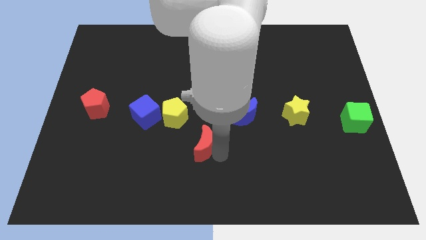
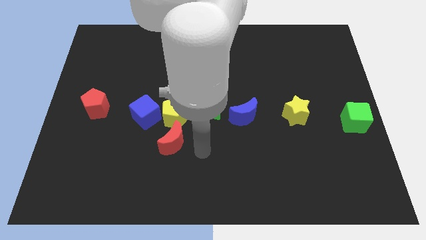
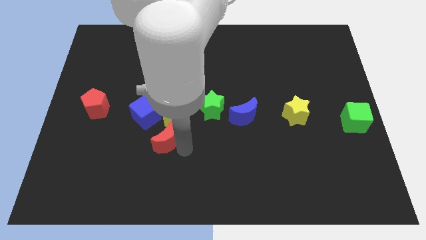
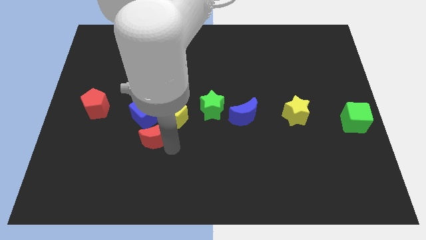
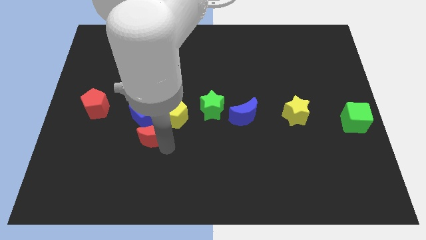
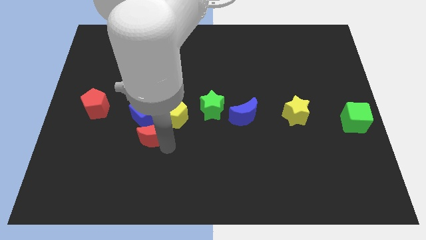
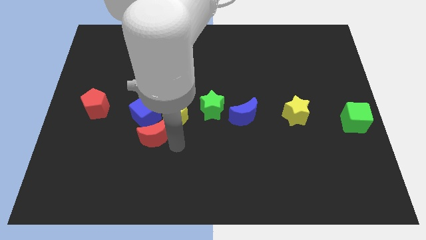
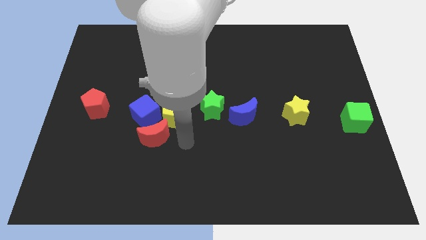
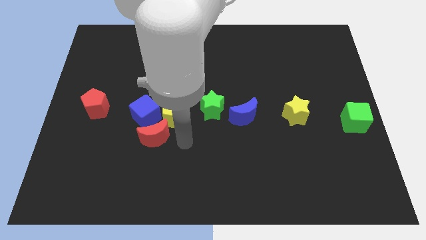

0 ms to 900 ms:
place the red moon below the blue cube

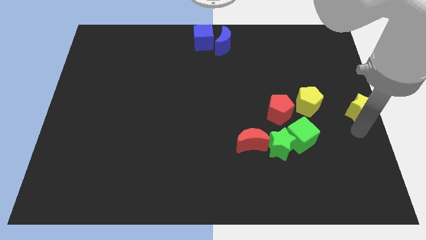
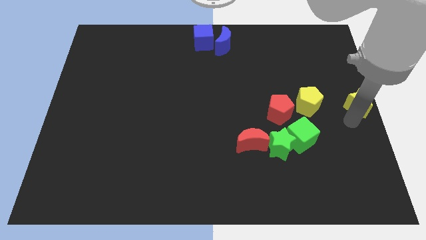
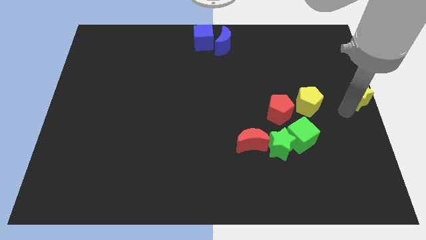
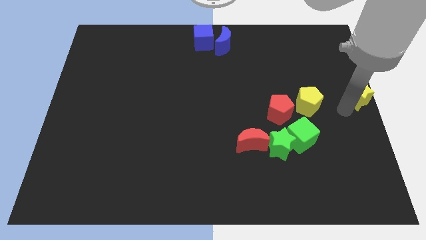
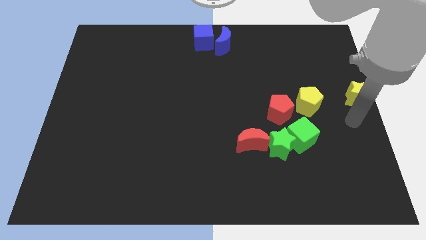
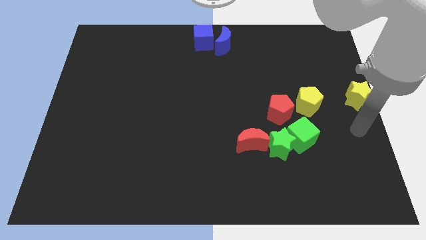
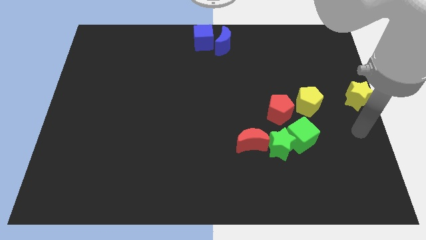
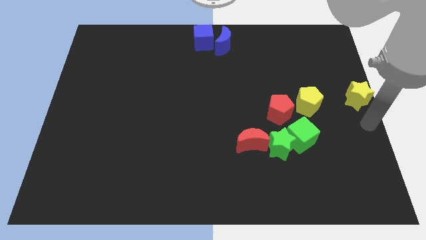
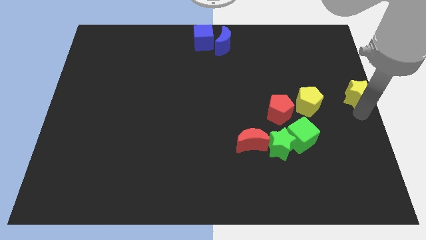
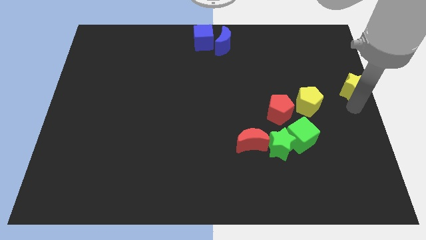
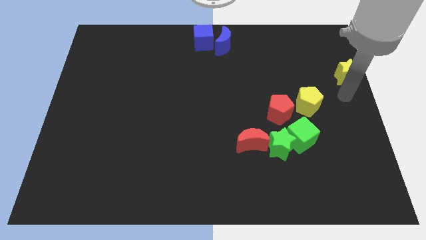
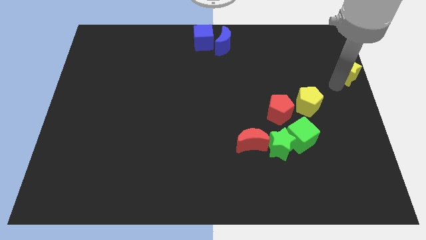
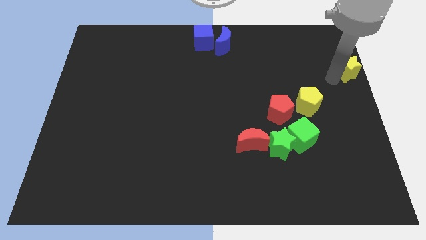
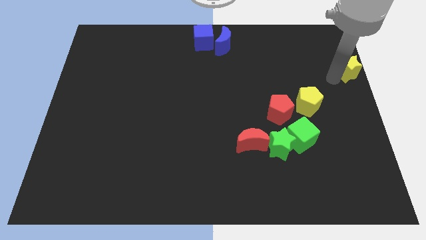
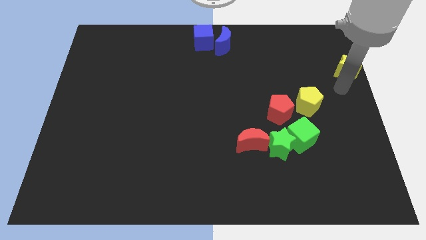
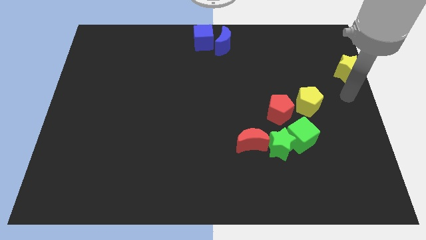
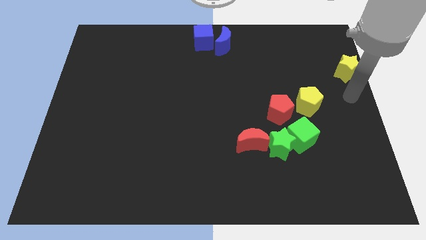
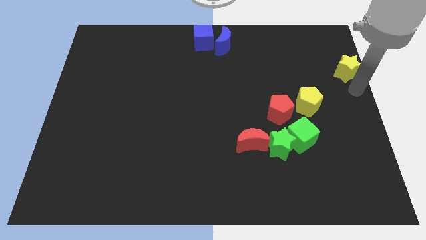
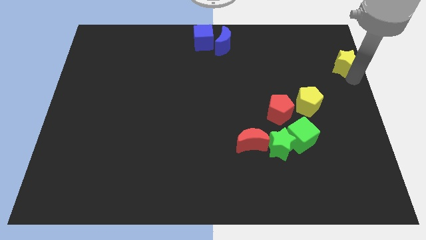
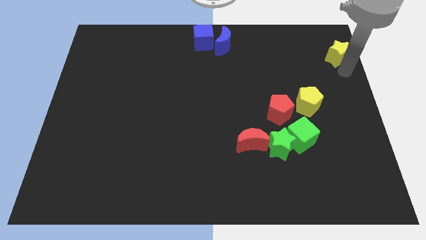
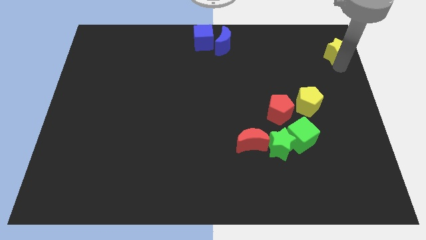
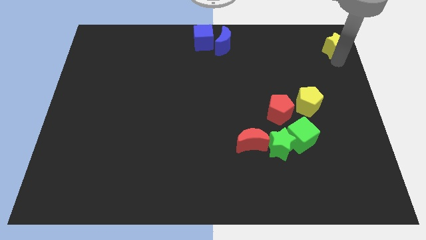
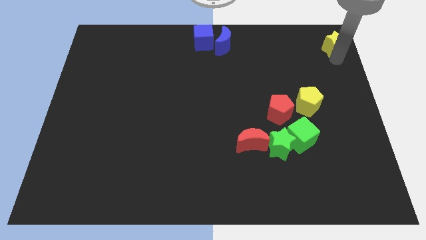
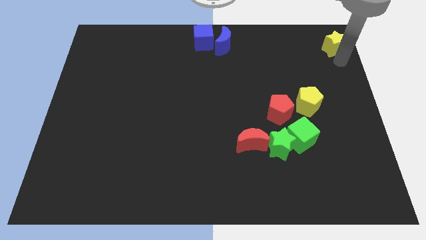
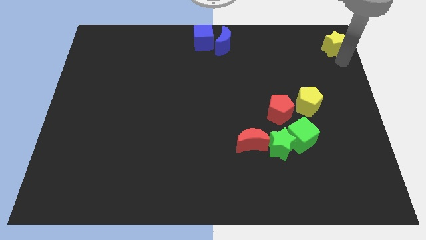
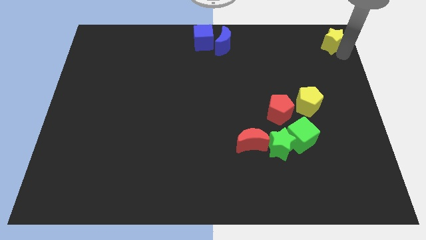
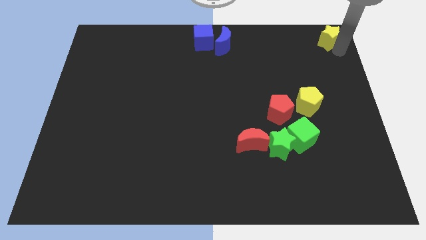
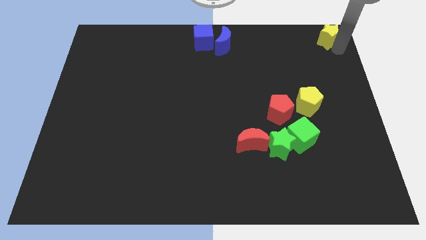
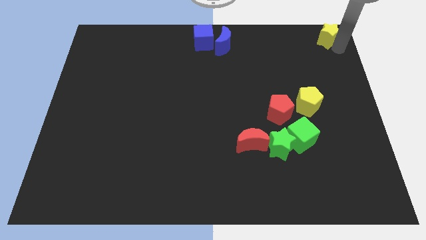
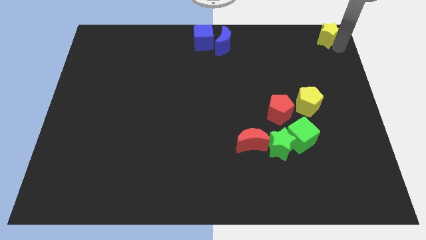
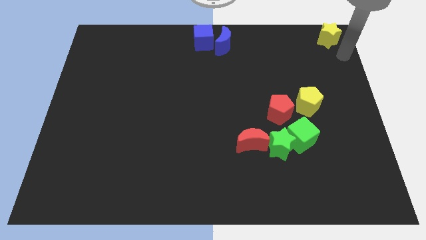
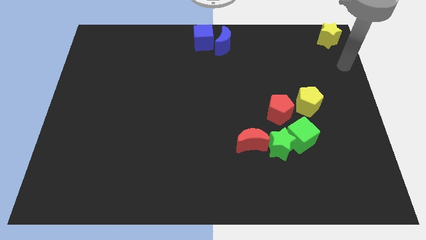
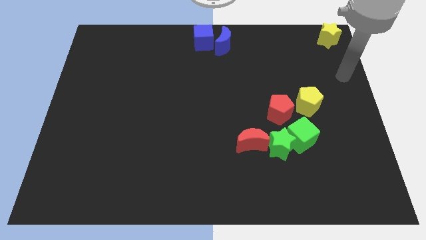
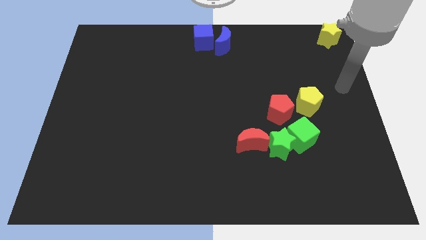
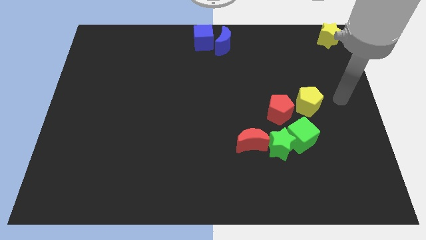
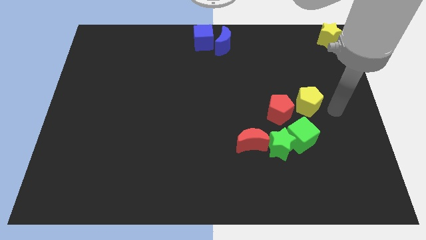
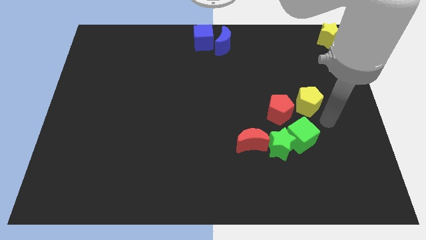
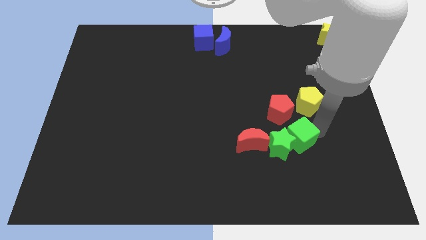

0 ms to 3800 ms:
drag the yellow star to the top right side of the board

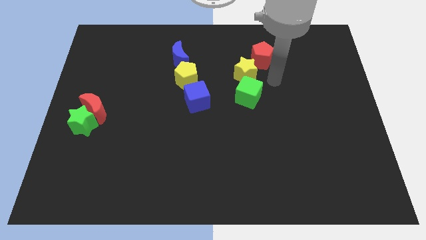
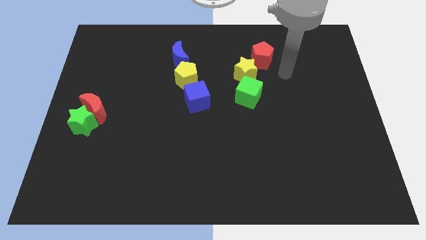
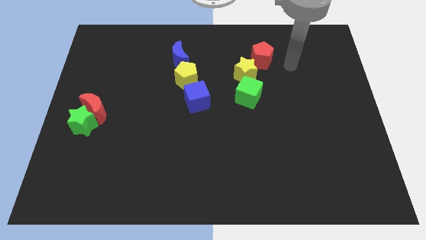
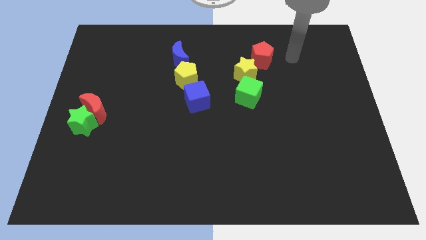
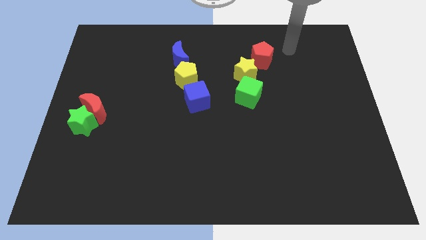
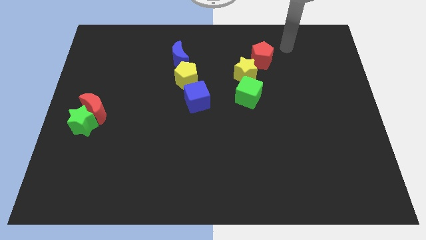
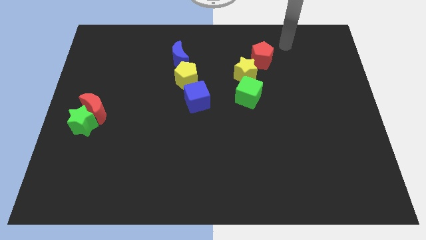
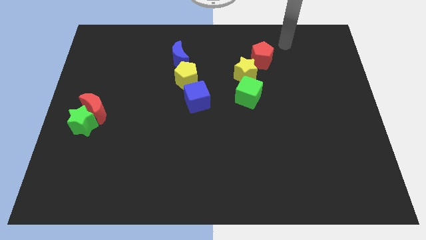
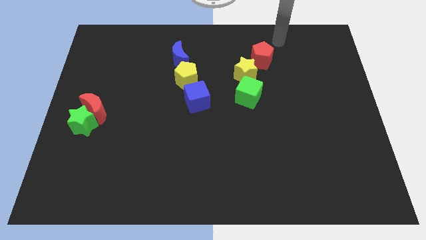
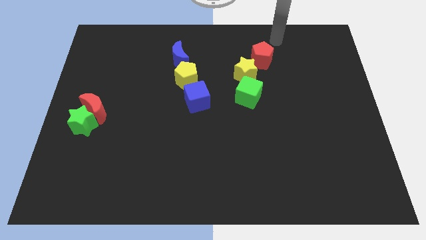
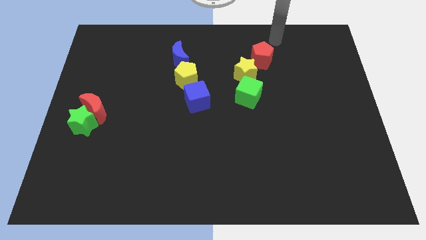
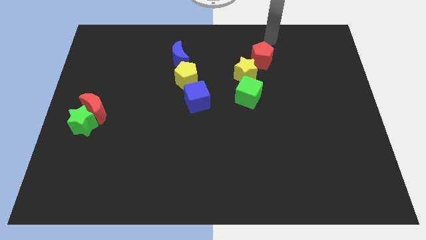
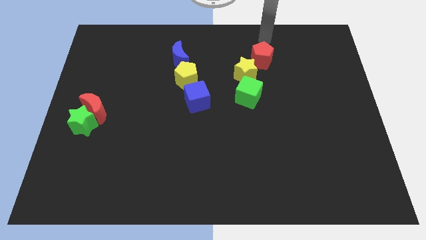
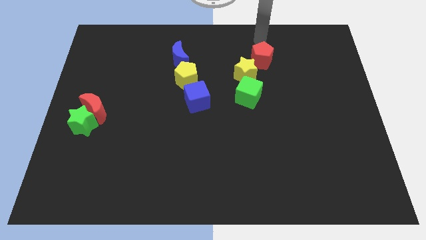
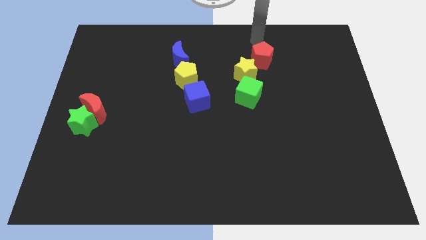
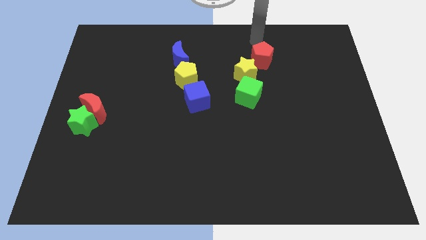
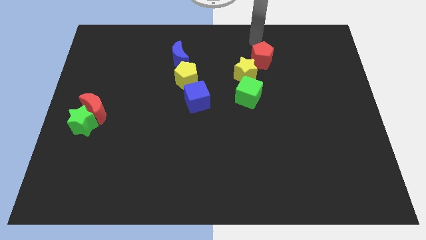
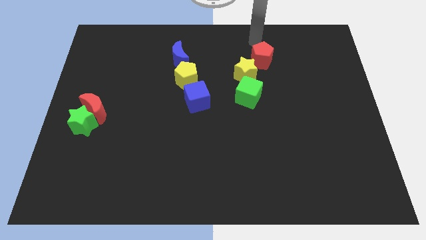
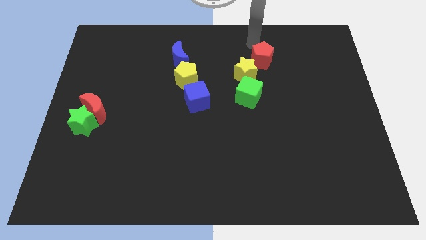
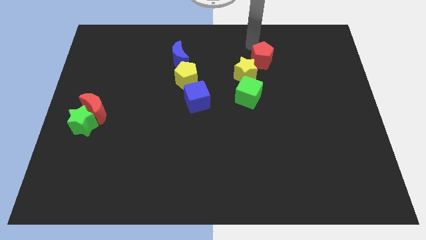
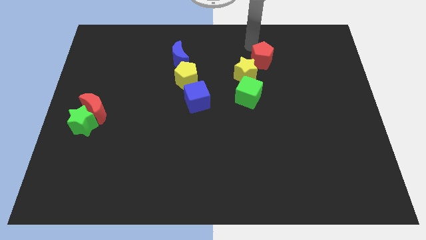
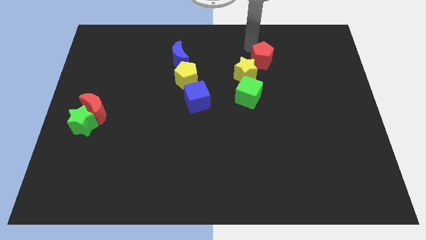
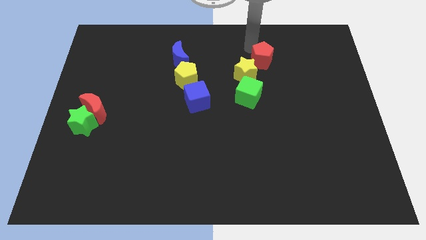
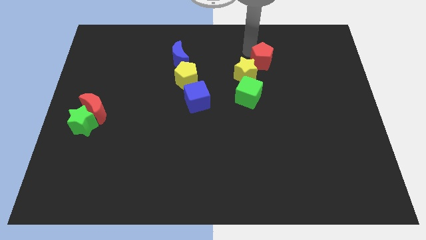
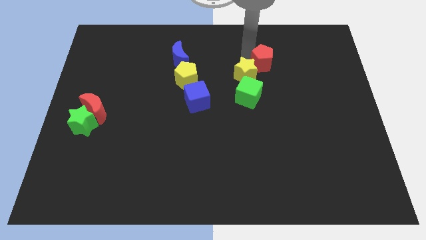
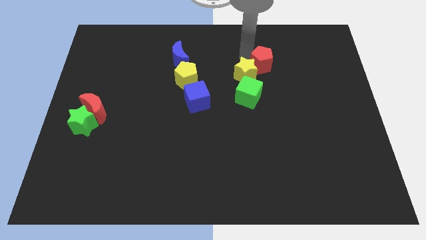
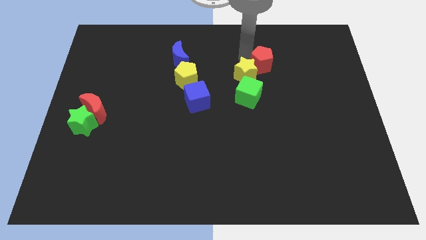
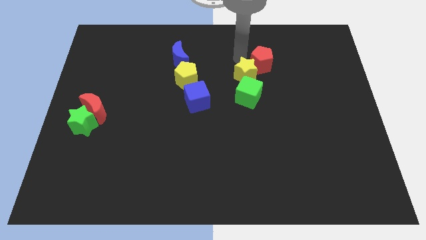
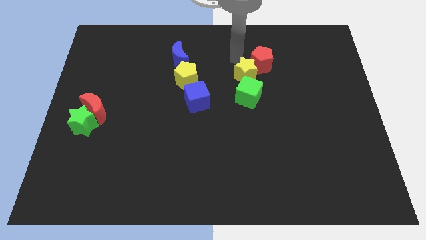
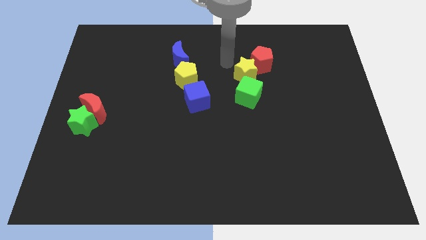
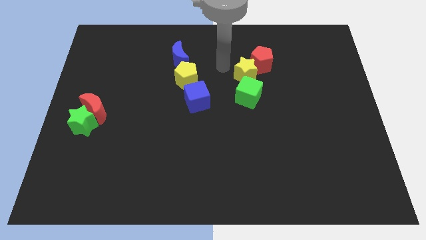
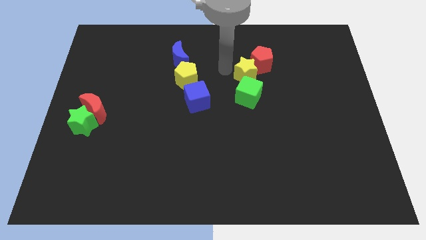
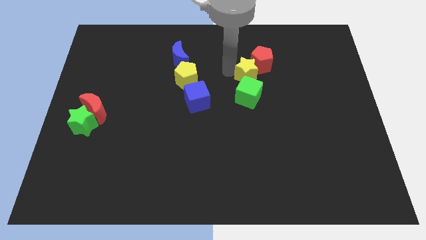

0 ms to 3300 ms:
place the red pentagon at the top right side of yellow star

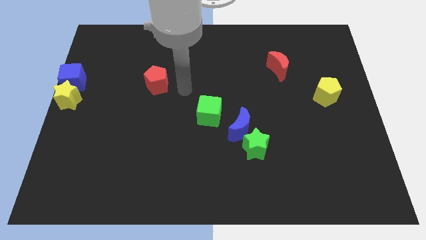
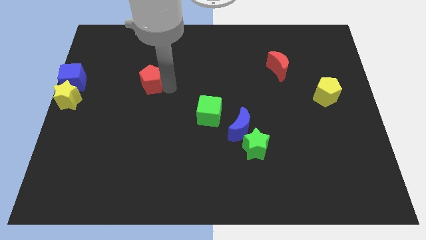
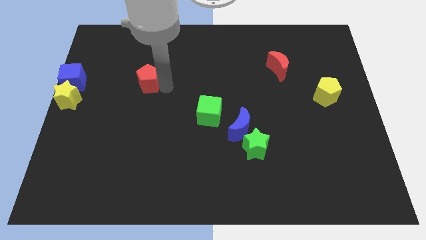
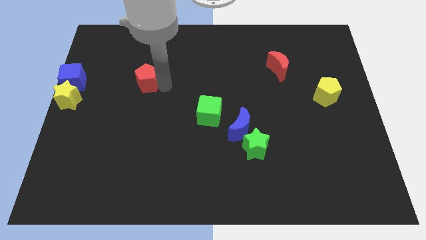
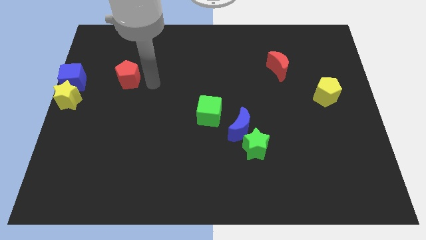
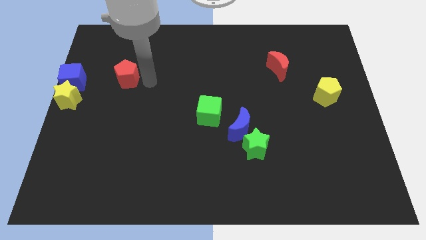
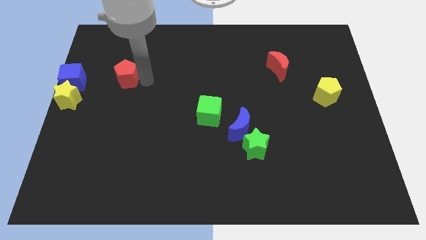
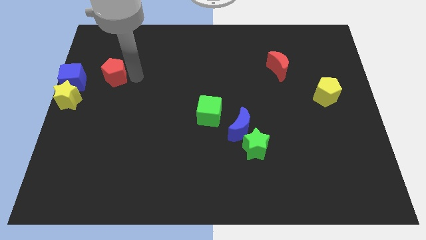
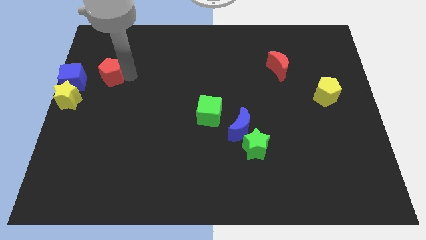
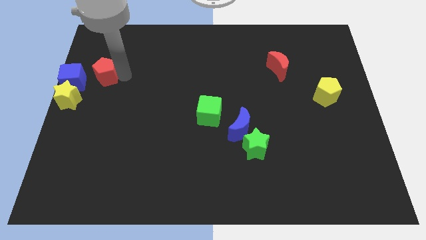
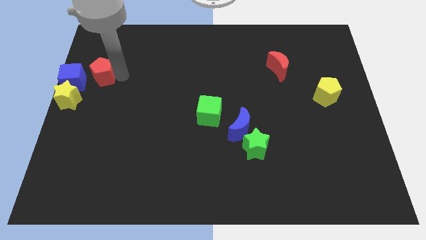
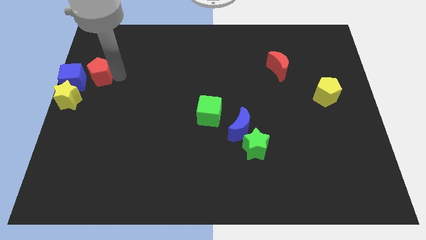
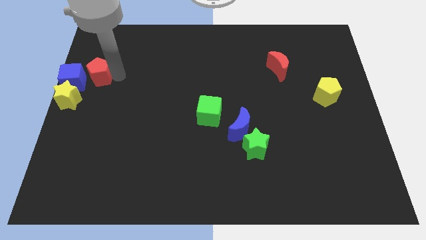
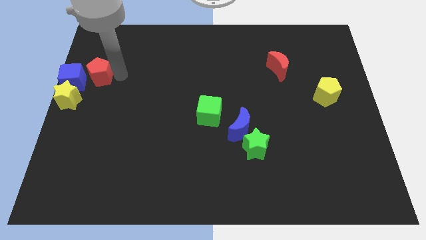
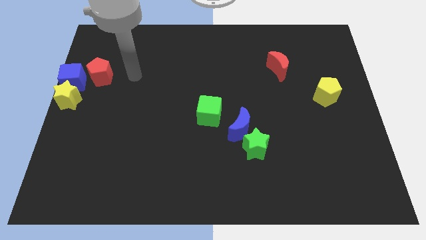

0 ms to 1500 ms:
move the red pentagon to the right side of the blue cube
